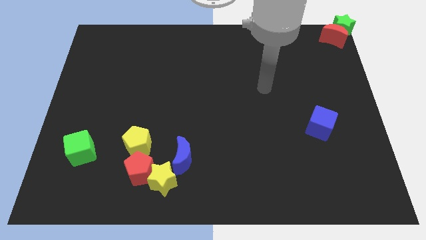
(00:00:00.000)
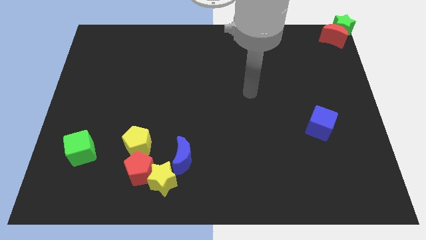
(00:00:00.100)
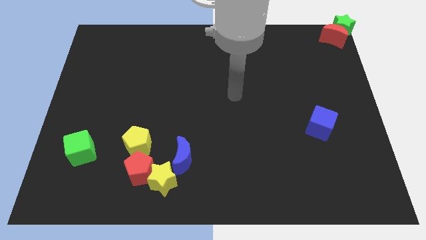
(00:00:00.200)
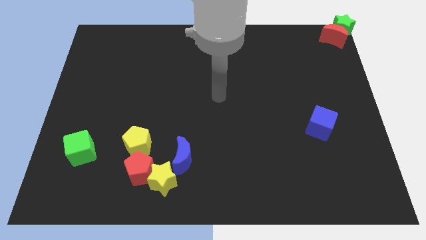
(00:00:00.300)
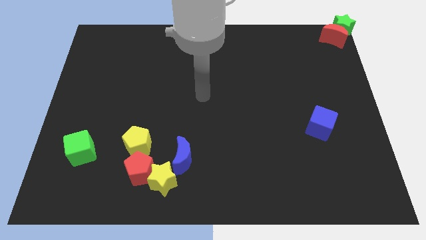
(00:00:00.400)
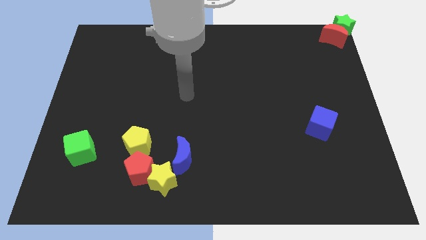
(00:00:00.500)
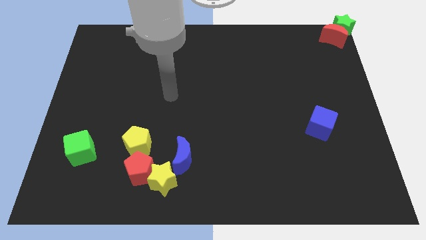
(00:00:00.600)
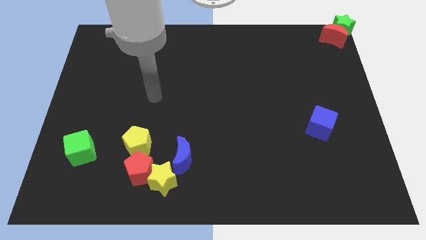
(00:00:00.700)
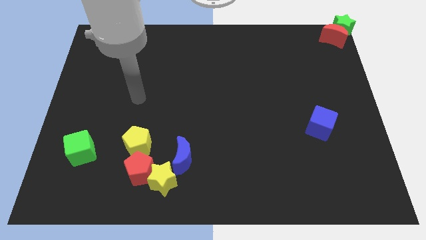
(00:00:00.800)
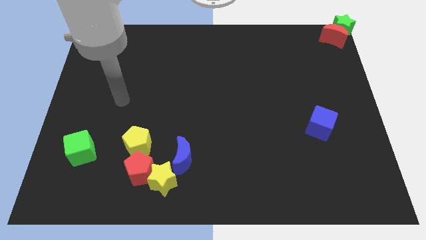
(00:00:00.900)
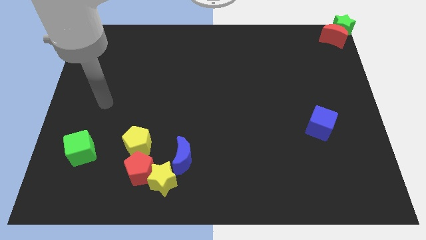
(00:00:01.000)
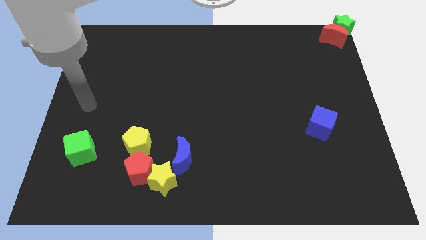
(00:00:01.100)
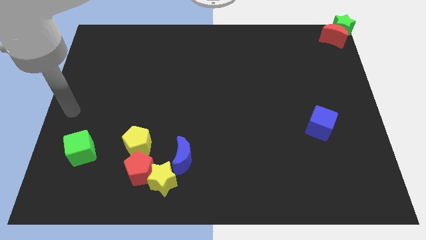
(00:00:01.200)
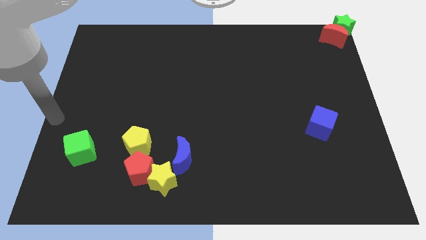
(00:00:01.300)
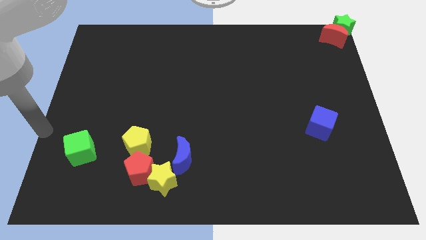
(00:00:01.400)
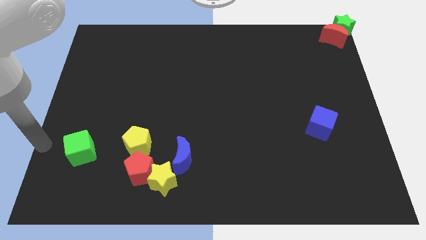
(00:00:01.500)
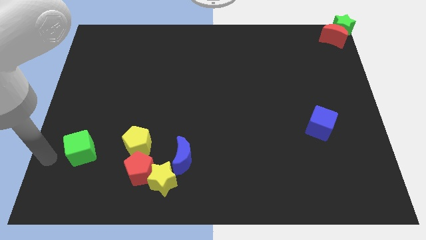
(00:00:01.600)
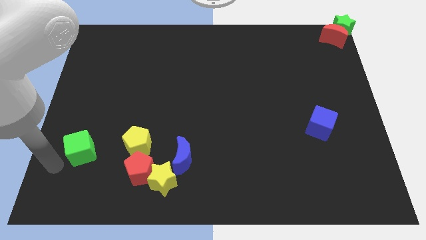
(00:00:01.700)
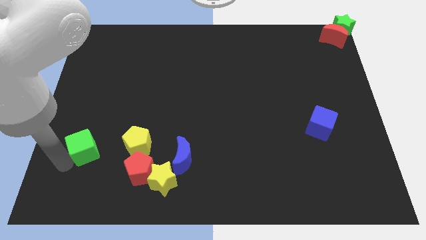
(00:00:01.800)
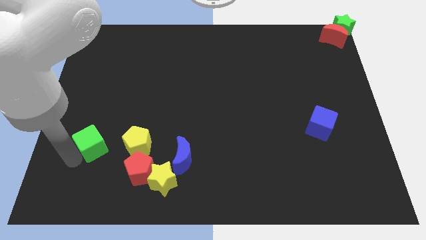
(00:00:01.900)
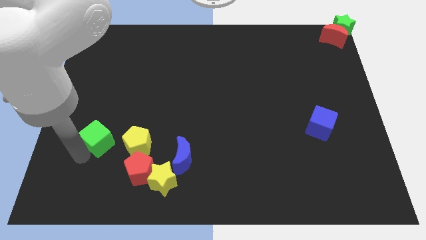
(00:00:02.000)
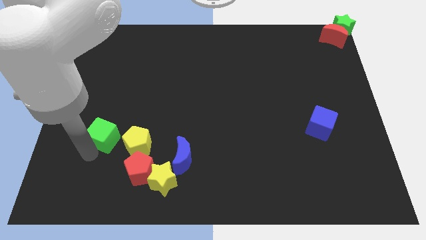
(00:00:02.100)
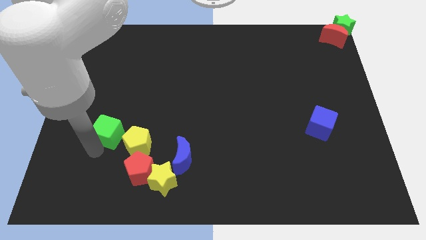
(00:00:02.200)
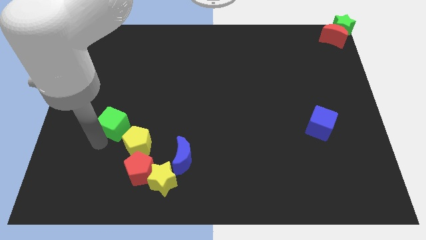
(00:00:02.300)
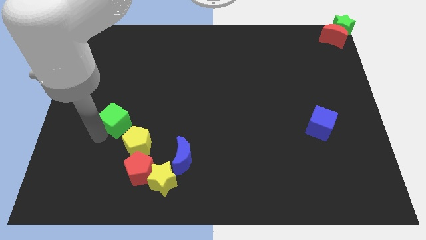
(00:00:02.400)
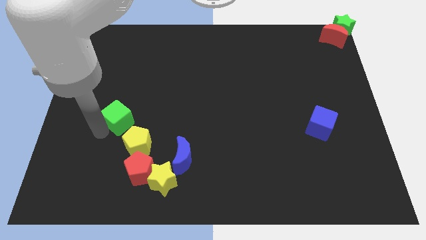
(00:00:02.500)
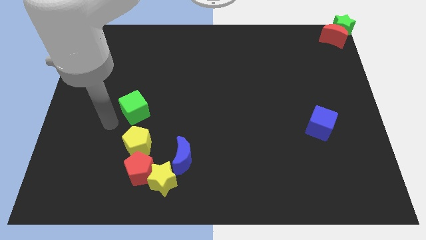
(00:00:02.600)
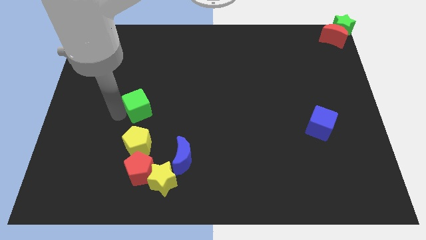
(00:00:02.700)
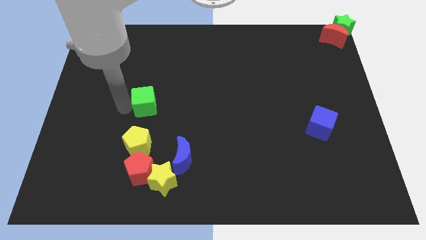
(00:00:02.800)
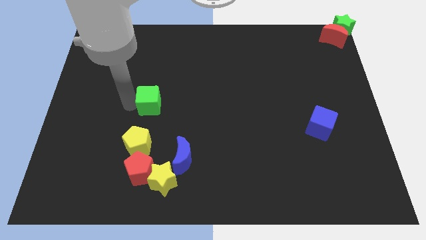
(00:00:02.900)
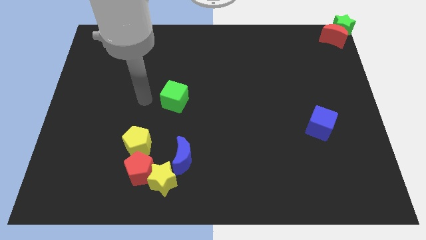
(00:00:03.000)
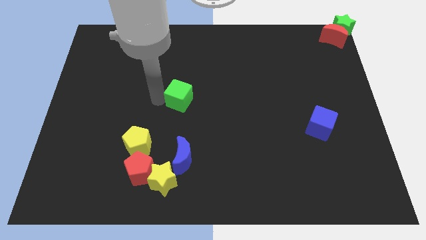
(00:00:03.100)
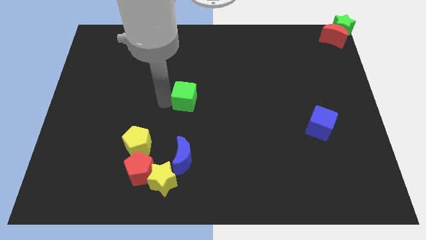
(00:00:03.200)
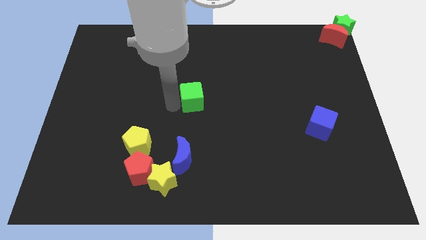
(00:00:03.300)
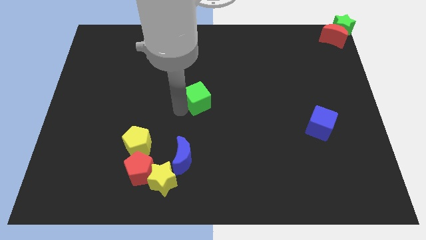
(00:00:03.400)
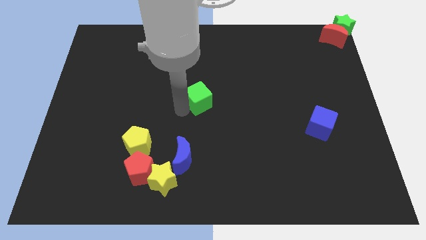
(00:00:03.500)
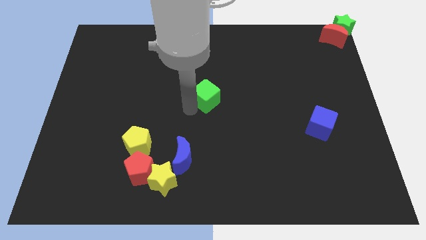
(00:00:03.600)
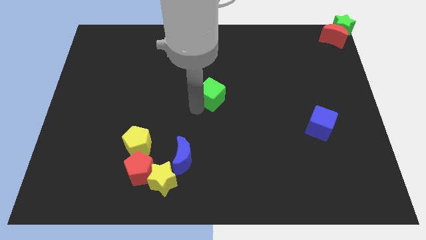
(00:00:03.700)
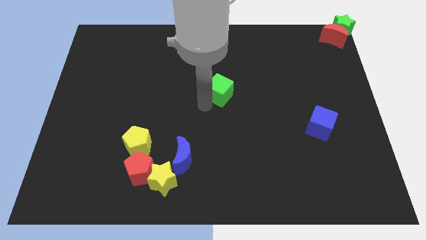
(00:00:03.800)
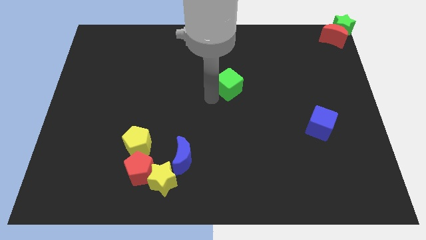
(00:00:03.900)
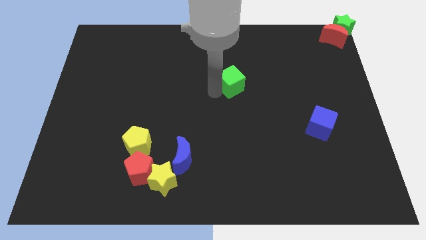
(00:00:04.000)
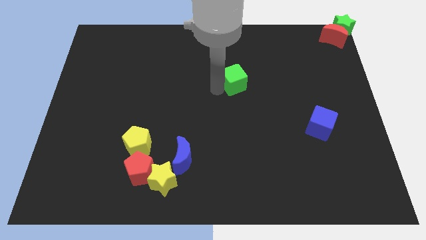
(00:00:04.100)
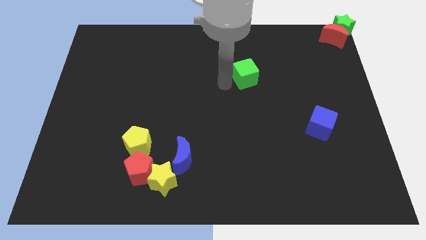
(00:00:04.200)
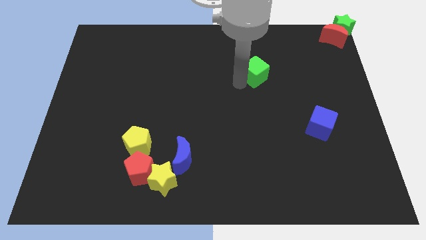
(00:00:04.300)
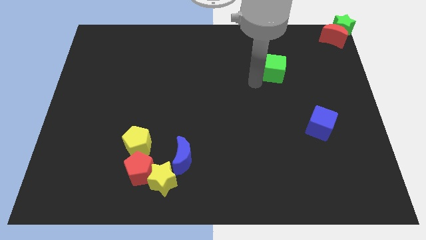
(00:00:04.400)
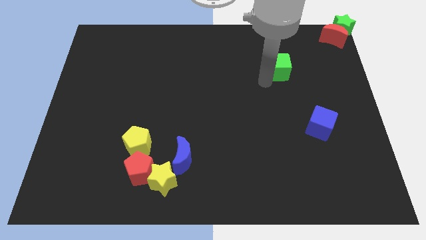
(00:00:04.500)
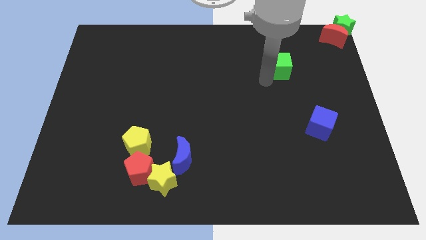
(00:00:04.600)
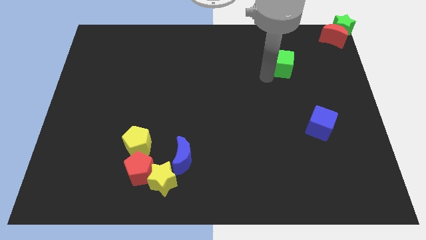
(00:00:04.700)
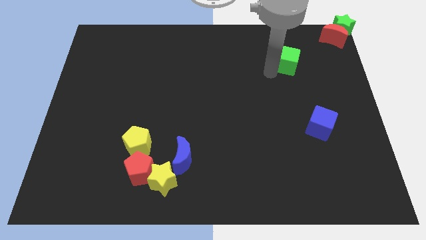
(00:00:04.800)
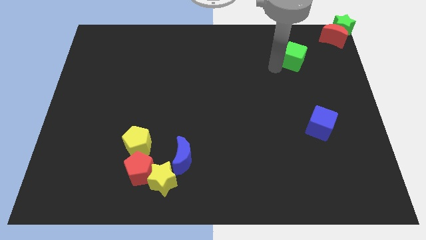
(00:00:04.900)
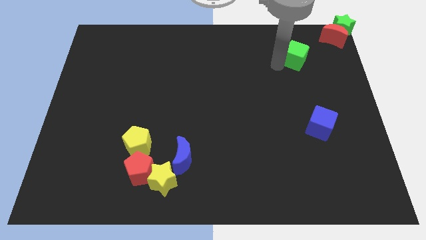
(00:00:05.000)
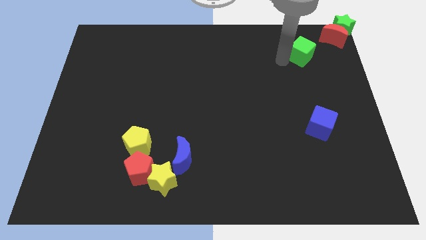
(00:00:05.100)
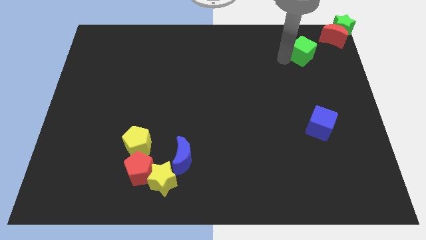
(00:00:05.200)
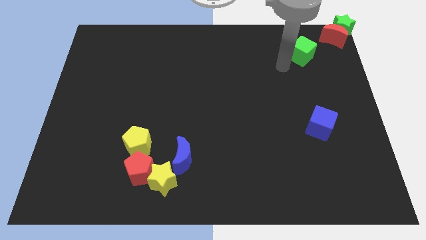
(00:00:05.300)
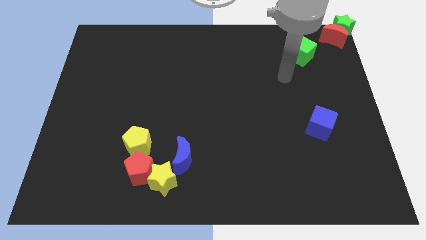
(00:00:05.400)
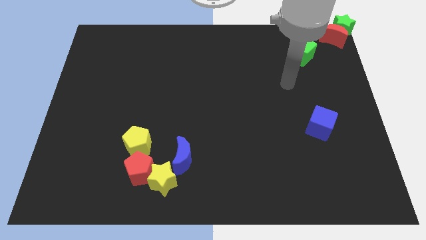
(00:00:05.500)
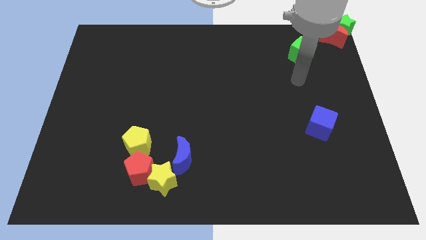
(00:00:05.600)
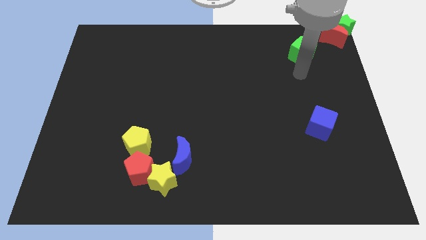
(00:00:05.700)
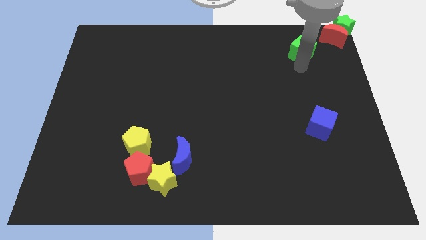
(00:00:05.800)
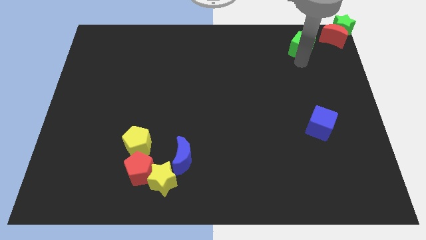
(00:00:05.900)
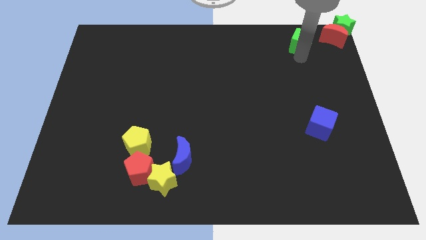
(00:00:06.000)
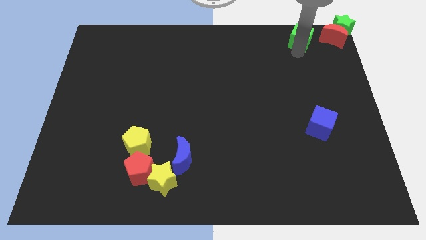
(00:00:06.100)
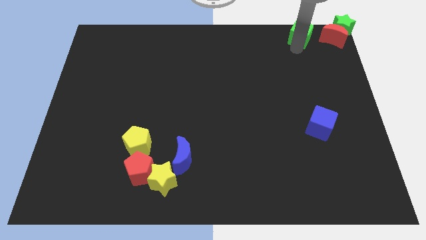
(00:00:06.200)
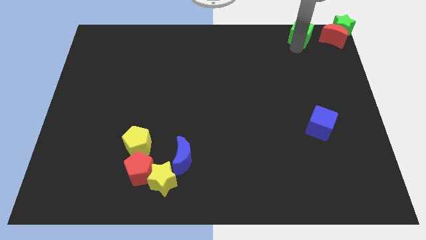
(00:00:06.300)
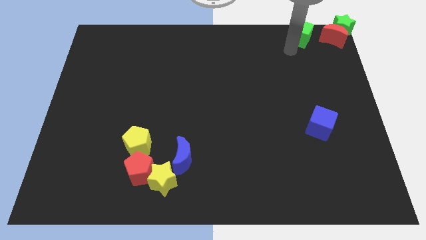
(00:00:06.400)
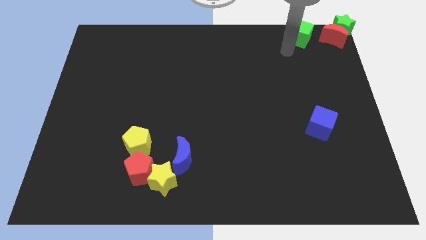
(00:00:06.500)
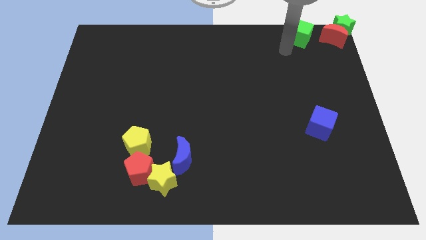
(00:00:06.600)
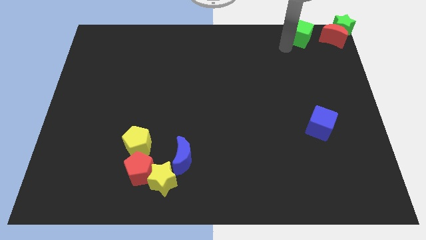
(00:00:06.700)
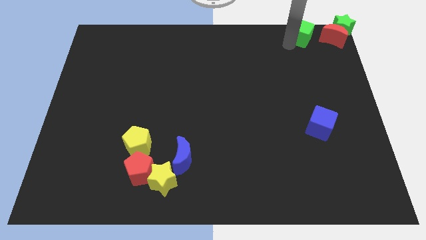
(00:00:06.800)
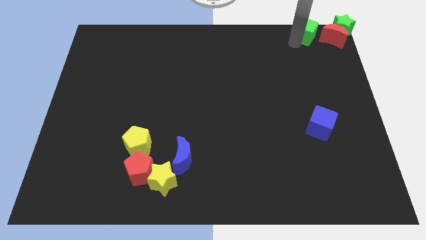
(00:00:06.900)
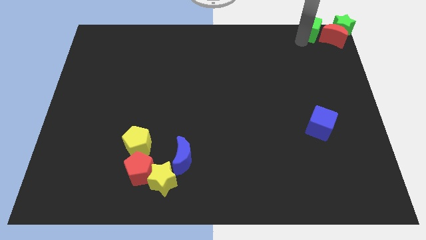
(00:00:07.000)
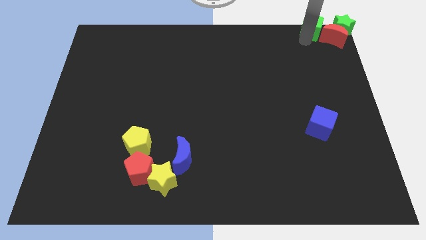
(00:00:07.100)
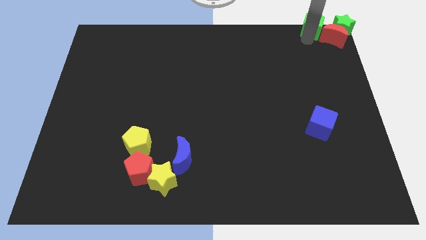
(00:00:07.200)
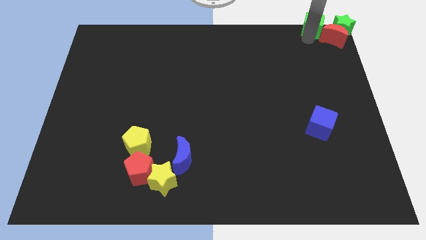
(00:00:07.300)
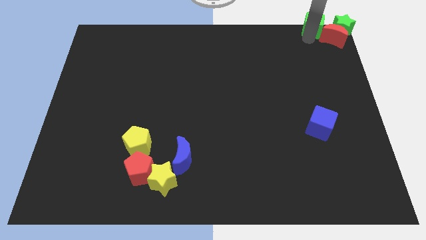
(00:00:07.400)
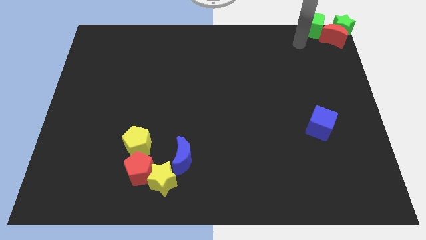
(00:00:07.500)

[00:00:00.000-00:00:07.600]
place the green cube to the top left of red crescent

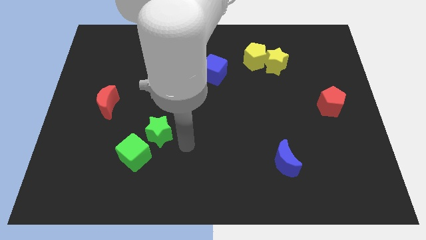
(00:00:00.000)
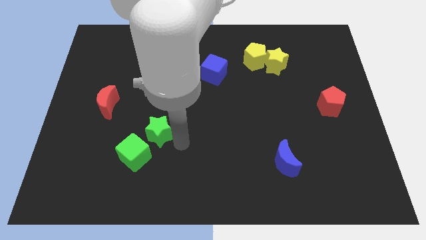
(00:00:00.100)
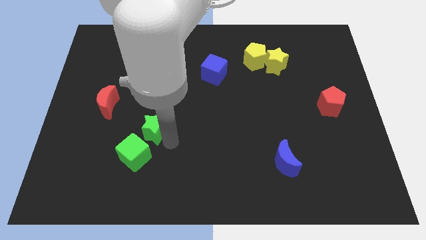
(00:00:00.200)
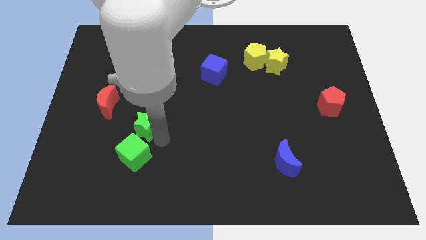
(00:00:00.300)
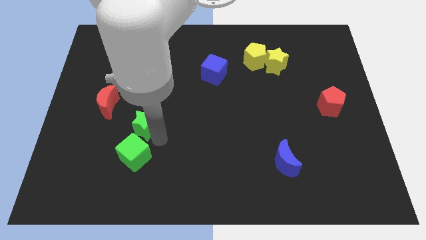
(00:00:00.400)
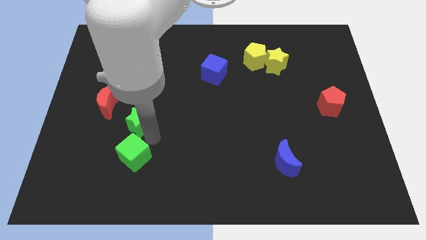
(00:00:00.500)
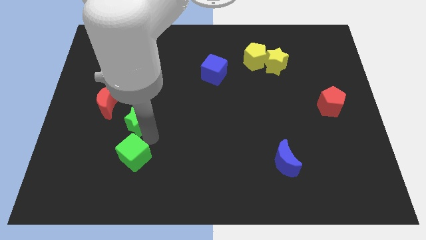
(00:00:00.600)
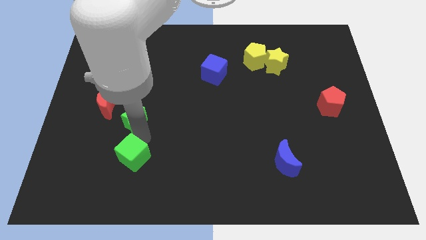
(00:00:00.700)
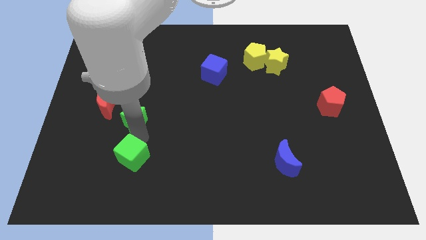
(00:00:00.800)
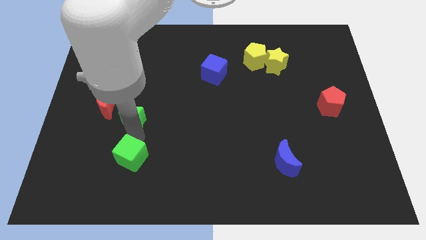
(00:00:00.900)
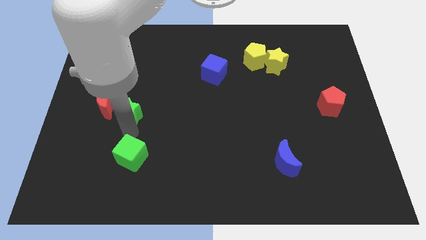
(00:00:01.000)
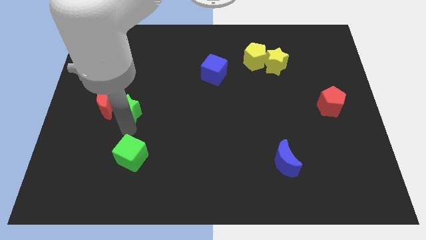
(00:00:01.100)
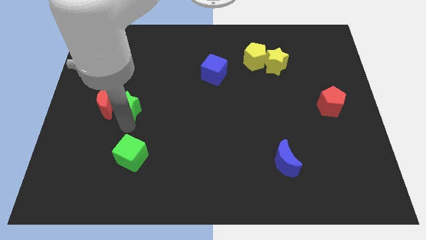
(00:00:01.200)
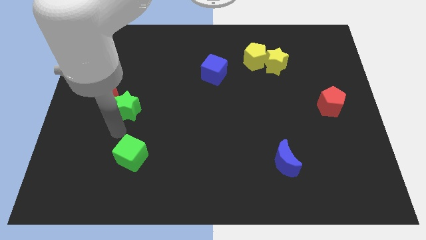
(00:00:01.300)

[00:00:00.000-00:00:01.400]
push the green star into the red moon
